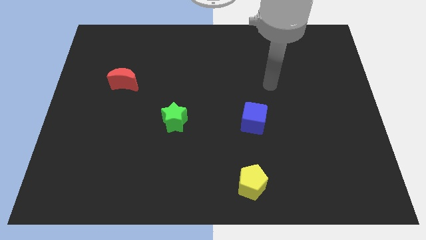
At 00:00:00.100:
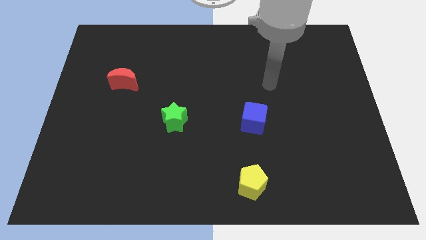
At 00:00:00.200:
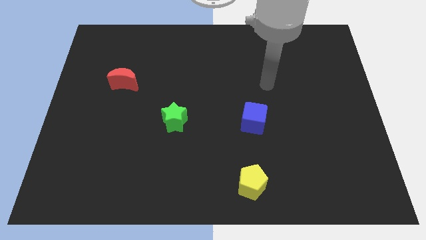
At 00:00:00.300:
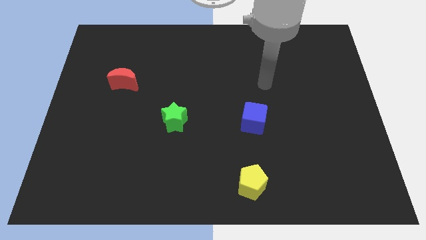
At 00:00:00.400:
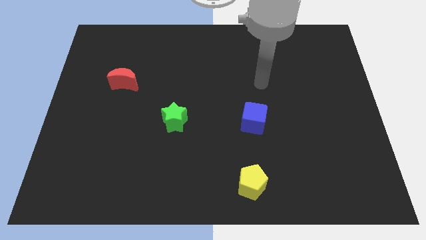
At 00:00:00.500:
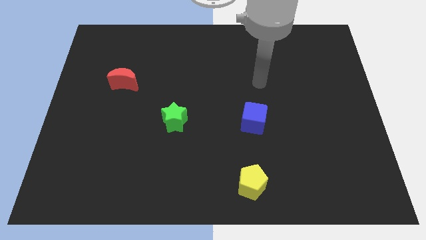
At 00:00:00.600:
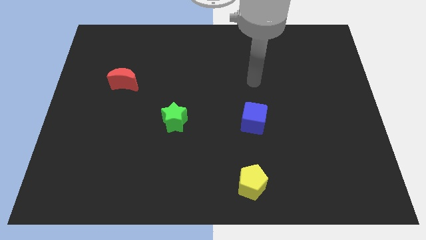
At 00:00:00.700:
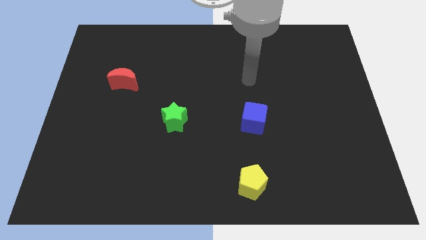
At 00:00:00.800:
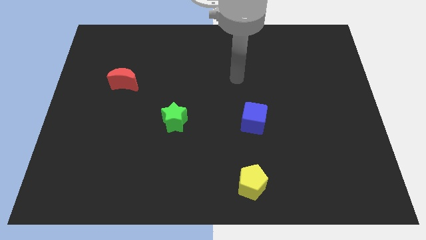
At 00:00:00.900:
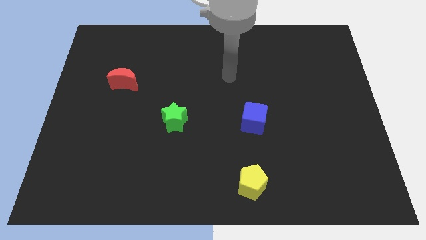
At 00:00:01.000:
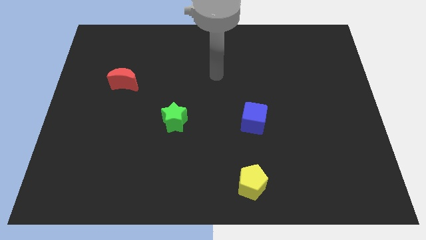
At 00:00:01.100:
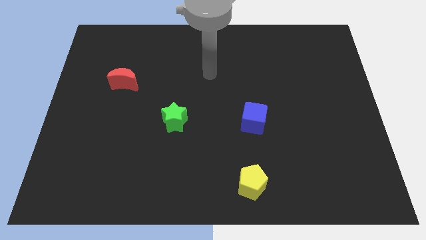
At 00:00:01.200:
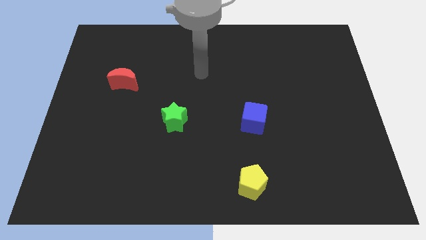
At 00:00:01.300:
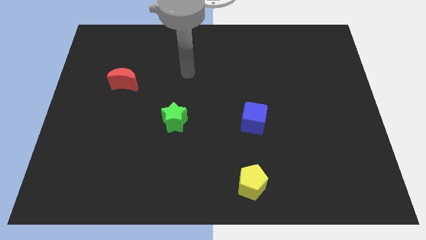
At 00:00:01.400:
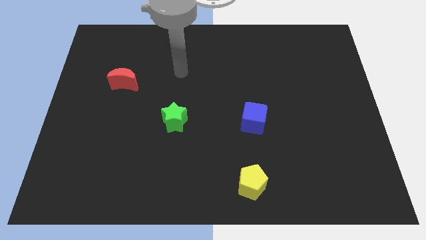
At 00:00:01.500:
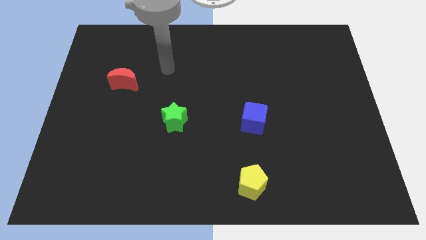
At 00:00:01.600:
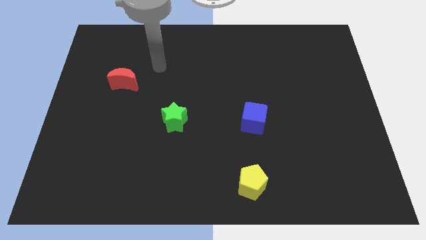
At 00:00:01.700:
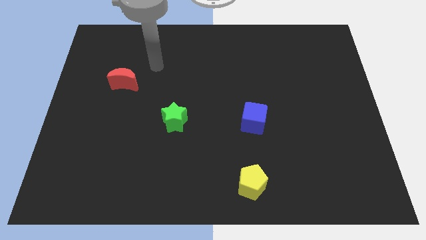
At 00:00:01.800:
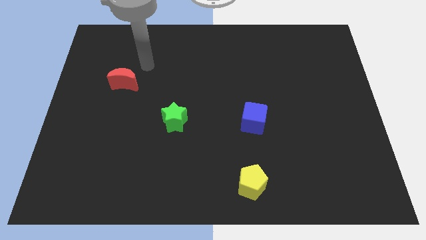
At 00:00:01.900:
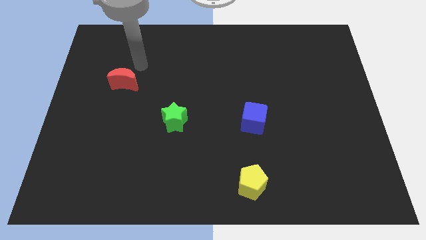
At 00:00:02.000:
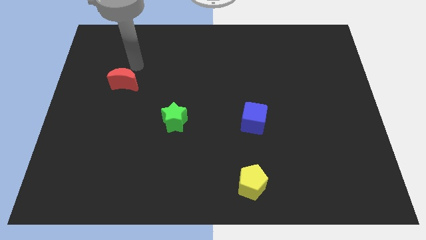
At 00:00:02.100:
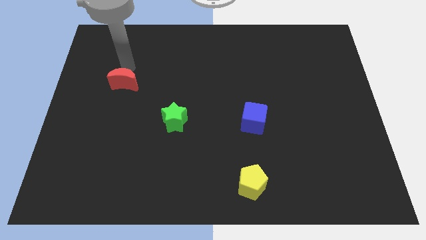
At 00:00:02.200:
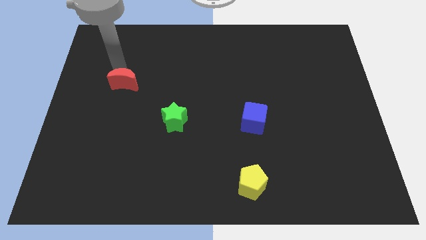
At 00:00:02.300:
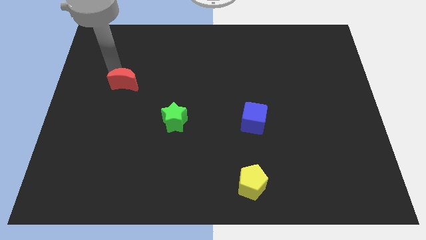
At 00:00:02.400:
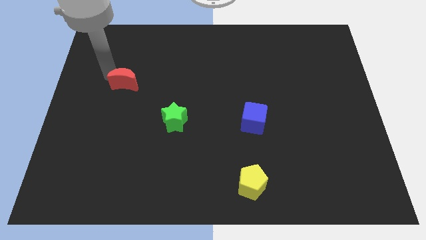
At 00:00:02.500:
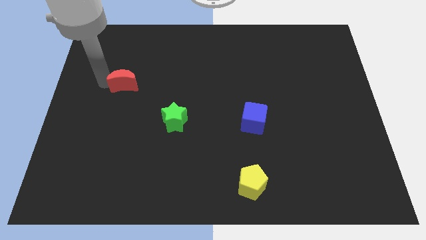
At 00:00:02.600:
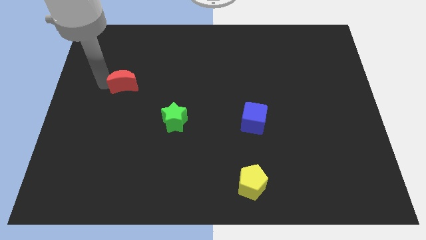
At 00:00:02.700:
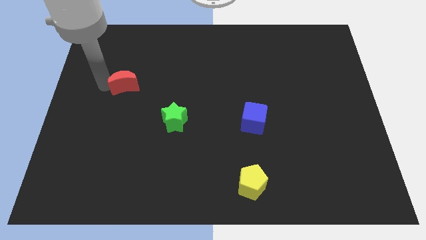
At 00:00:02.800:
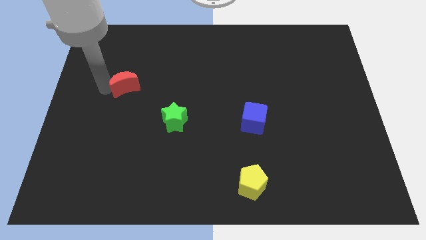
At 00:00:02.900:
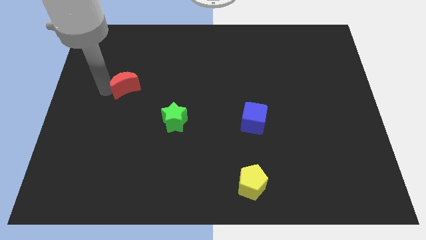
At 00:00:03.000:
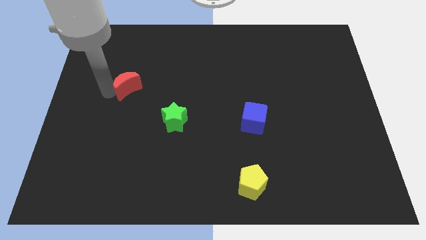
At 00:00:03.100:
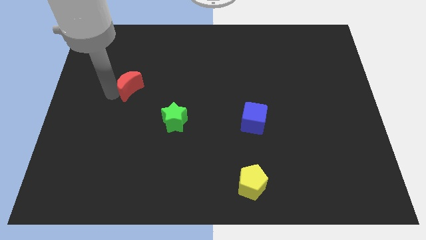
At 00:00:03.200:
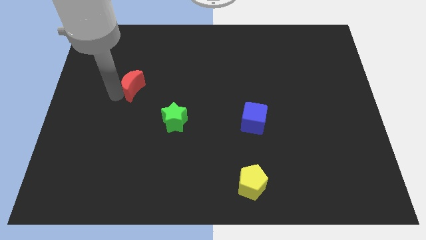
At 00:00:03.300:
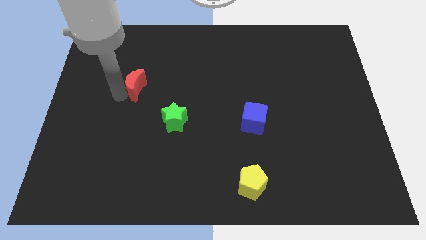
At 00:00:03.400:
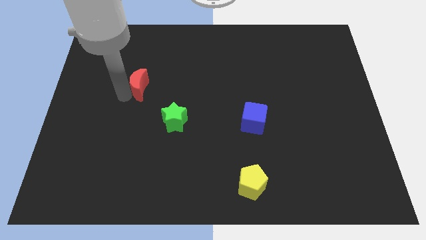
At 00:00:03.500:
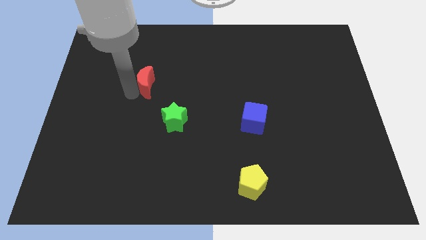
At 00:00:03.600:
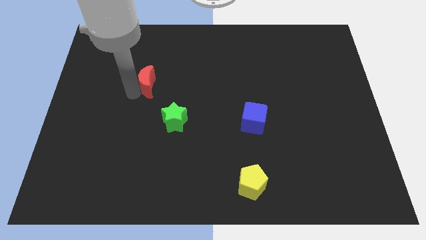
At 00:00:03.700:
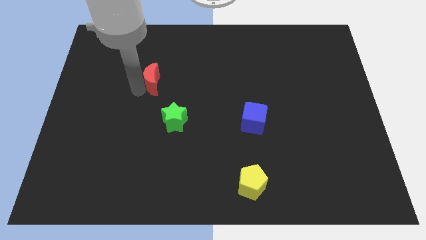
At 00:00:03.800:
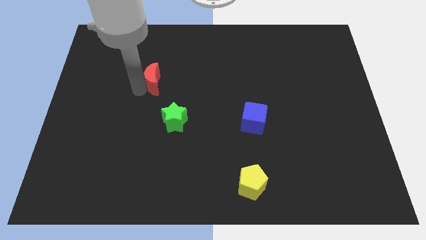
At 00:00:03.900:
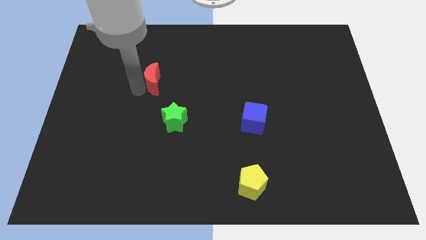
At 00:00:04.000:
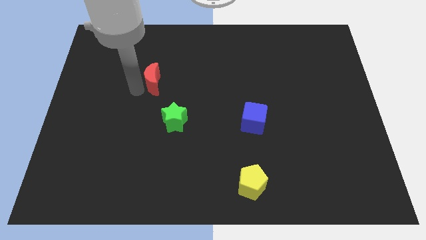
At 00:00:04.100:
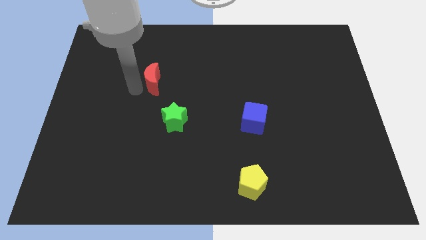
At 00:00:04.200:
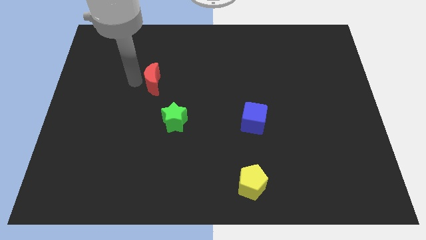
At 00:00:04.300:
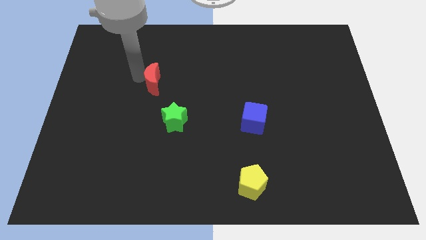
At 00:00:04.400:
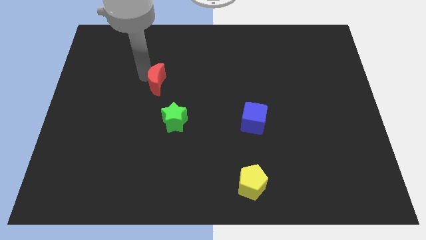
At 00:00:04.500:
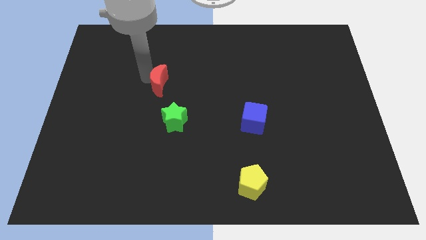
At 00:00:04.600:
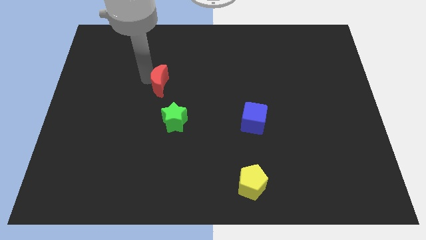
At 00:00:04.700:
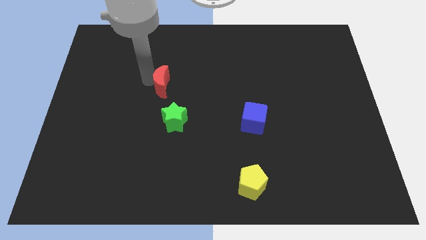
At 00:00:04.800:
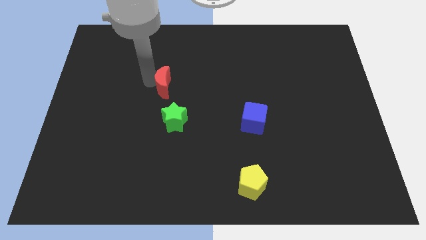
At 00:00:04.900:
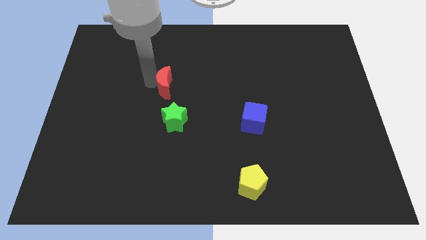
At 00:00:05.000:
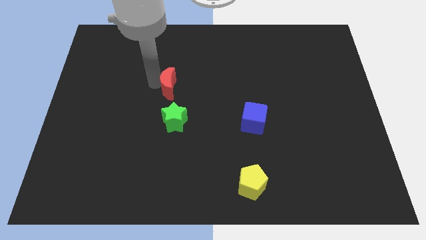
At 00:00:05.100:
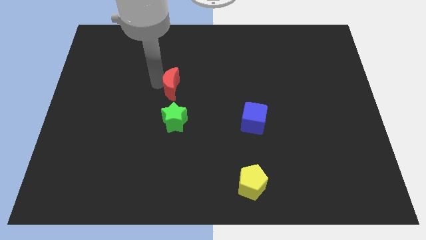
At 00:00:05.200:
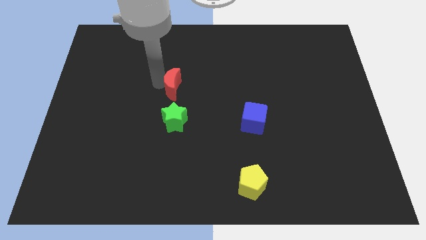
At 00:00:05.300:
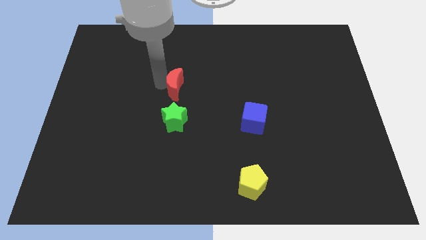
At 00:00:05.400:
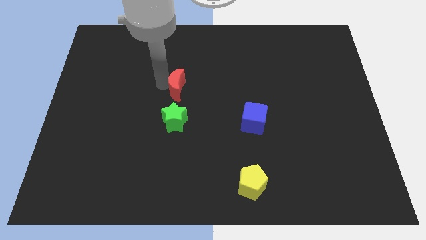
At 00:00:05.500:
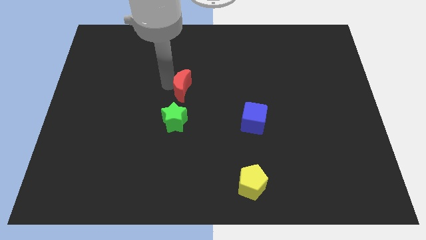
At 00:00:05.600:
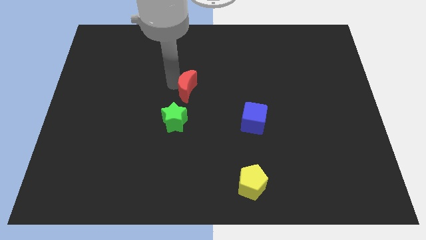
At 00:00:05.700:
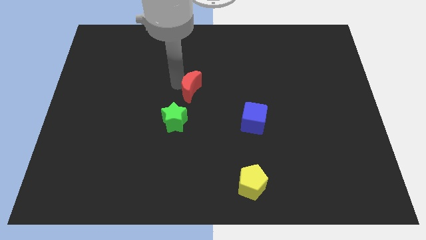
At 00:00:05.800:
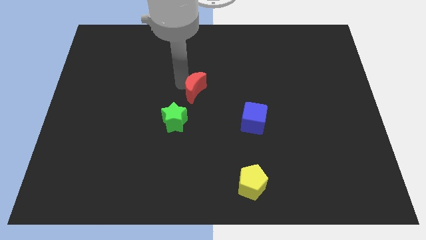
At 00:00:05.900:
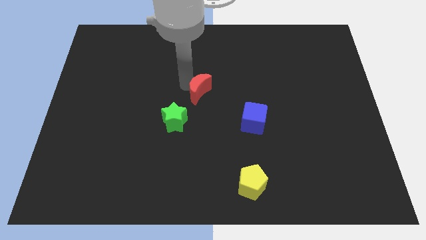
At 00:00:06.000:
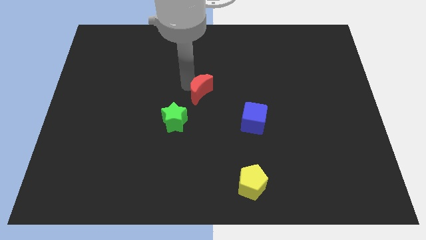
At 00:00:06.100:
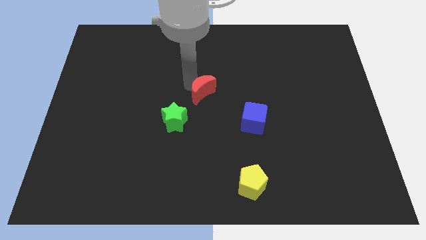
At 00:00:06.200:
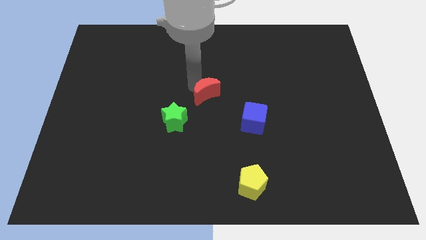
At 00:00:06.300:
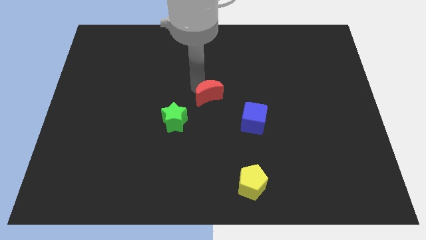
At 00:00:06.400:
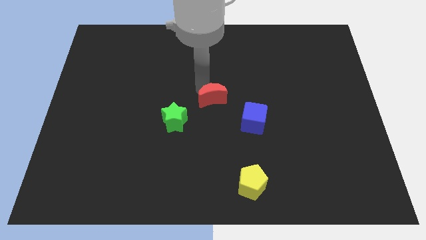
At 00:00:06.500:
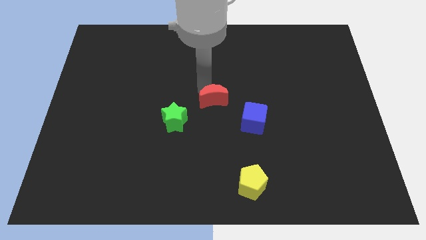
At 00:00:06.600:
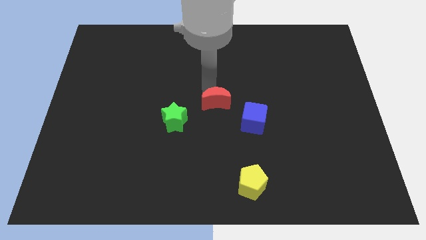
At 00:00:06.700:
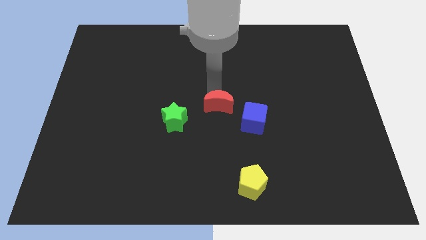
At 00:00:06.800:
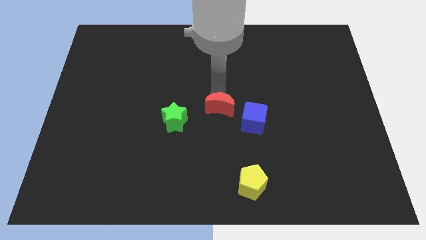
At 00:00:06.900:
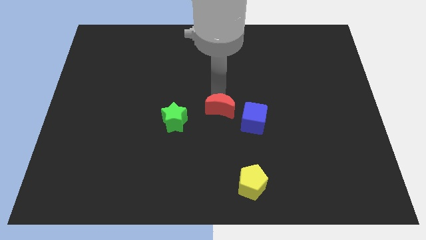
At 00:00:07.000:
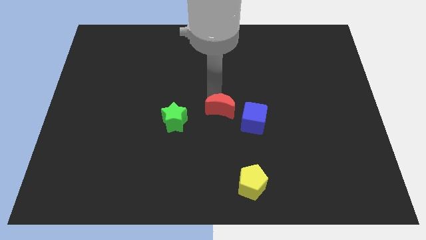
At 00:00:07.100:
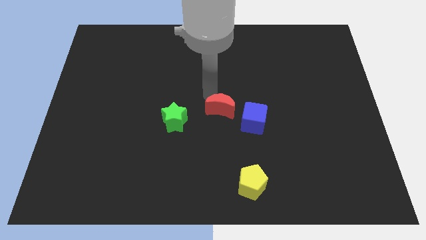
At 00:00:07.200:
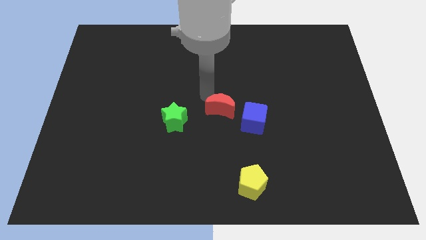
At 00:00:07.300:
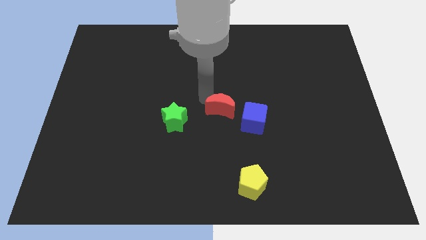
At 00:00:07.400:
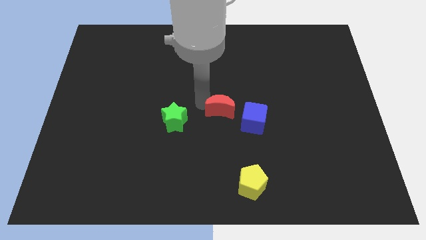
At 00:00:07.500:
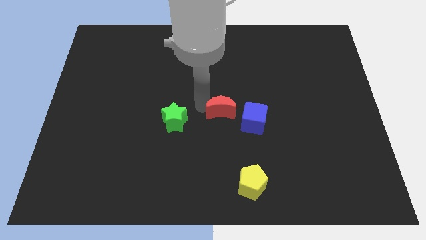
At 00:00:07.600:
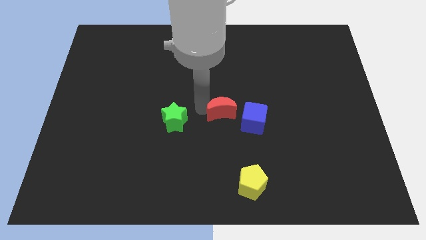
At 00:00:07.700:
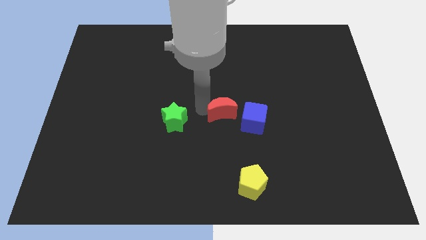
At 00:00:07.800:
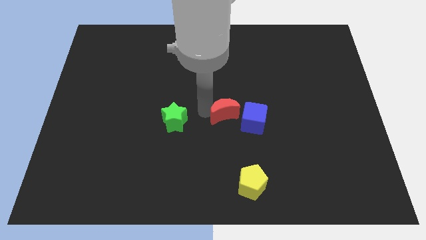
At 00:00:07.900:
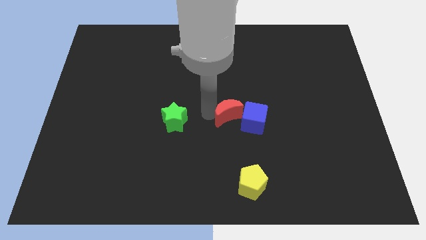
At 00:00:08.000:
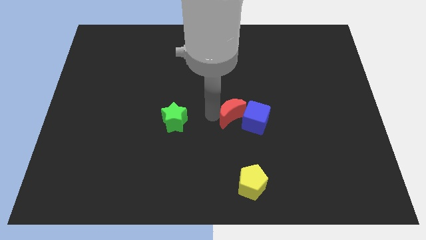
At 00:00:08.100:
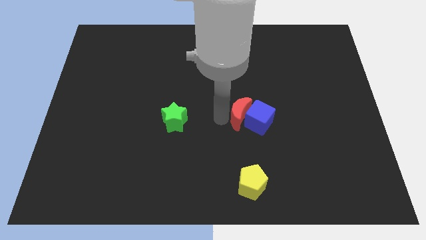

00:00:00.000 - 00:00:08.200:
move the moon towards the blue cube

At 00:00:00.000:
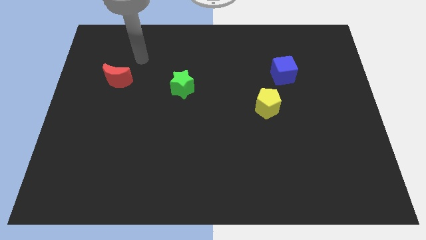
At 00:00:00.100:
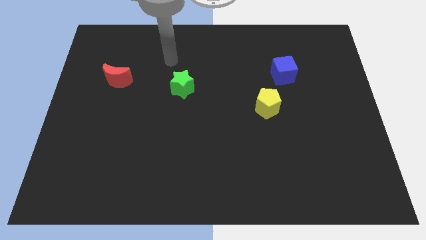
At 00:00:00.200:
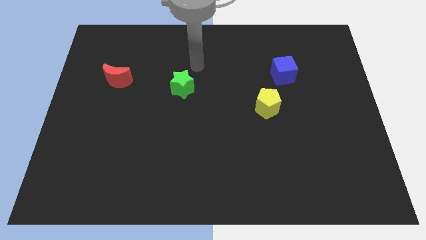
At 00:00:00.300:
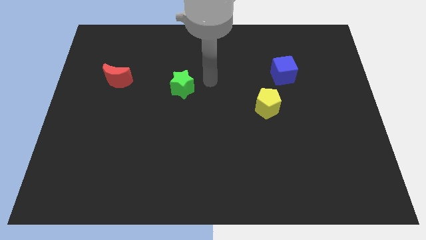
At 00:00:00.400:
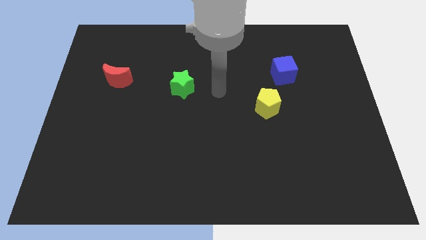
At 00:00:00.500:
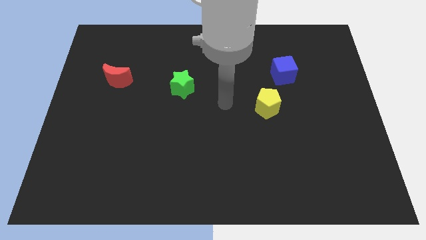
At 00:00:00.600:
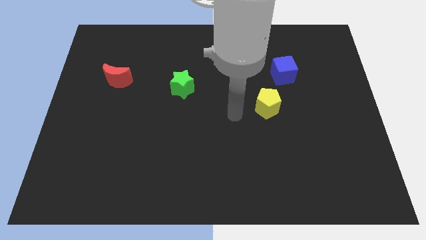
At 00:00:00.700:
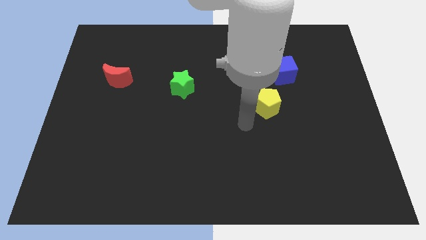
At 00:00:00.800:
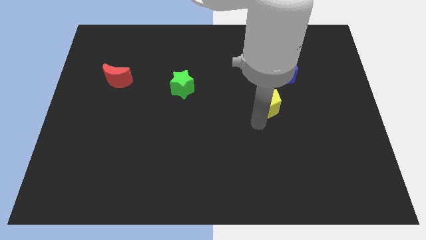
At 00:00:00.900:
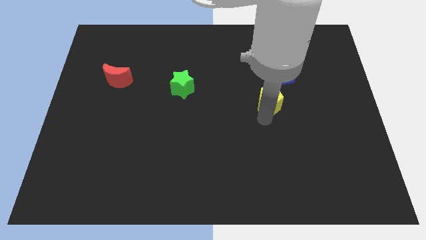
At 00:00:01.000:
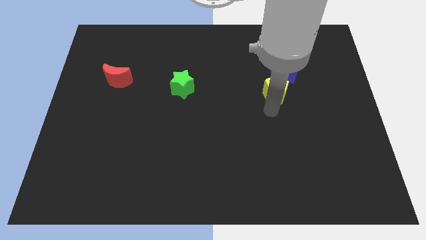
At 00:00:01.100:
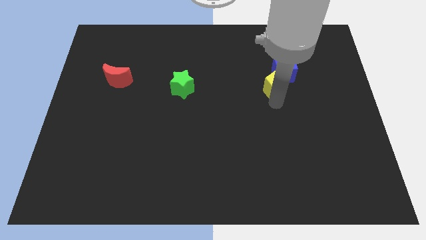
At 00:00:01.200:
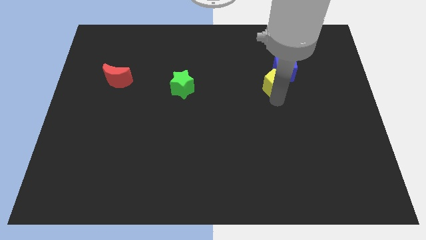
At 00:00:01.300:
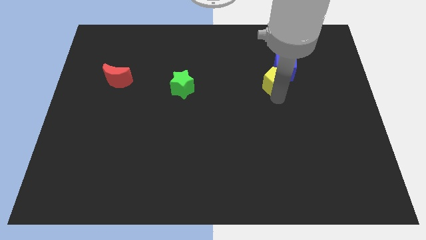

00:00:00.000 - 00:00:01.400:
slide the pentagon towards the cube
